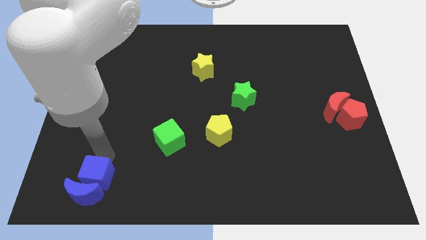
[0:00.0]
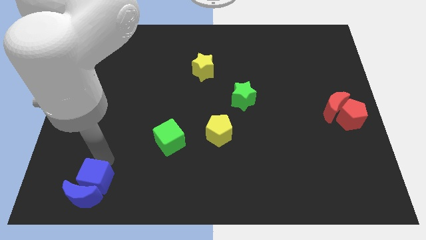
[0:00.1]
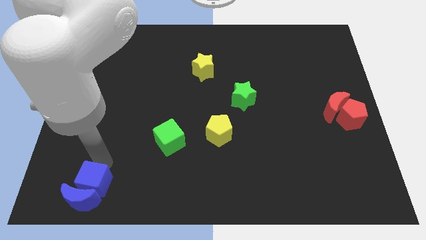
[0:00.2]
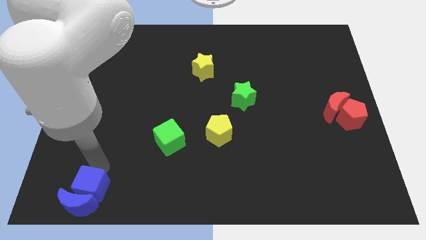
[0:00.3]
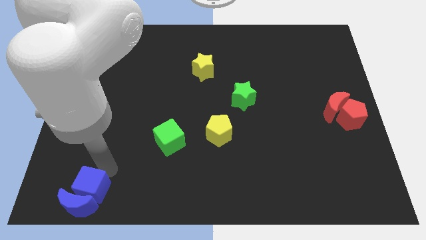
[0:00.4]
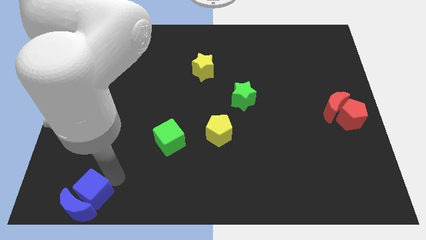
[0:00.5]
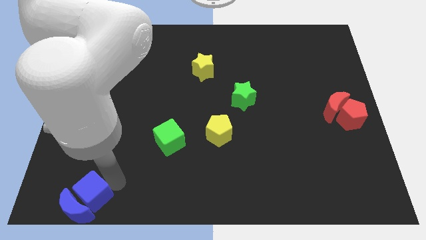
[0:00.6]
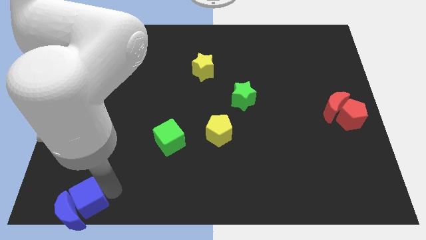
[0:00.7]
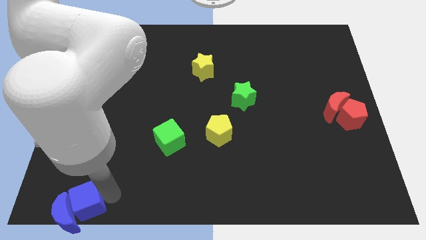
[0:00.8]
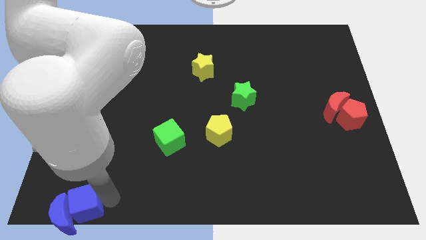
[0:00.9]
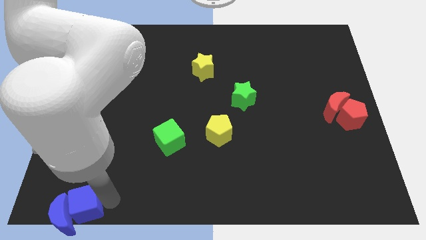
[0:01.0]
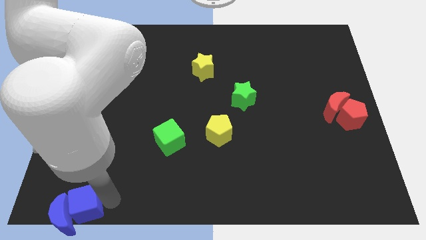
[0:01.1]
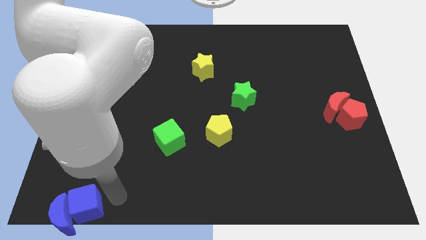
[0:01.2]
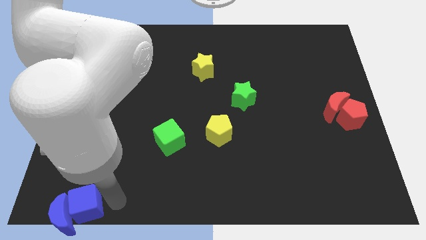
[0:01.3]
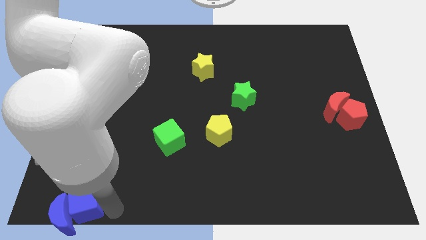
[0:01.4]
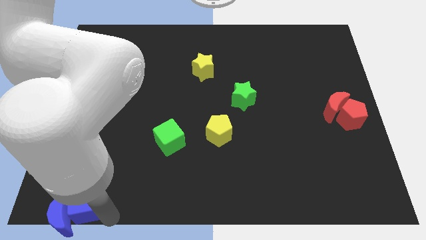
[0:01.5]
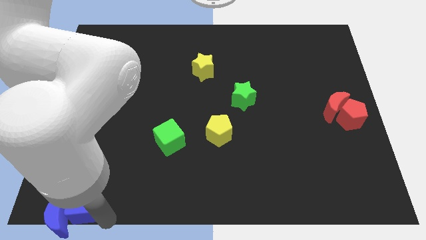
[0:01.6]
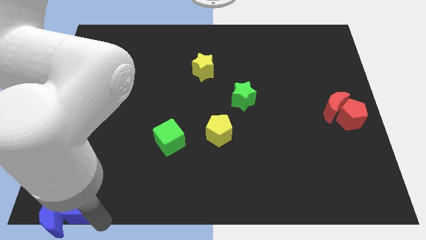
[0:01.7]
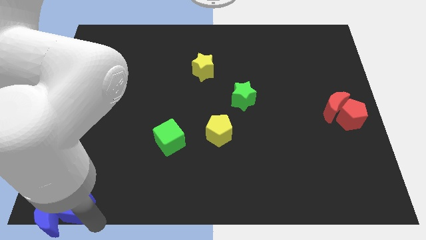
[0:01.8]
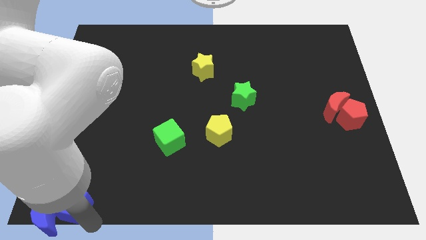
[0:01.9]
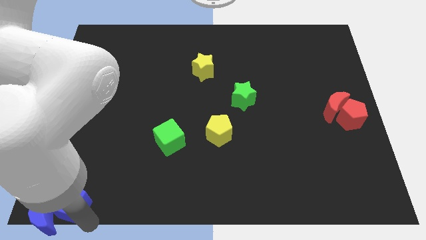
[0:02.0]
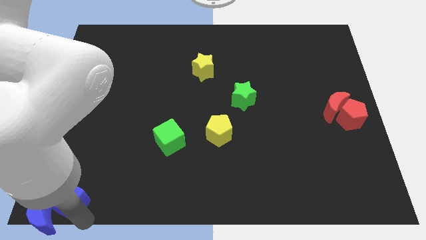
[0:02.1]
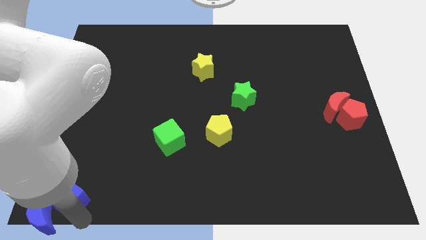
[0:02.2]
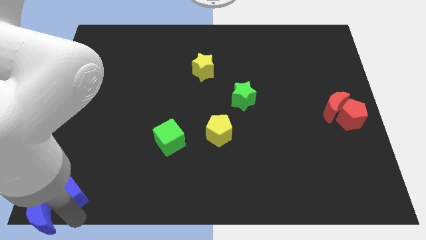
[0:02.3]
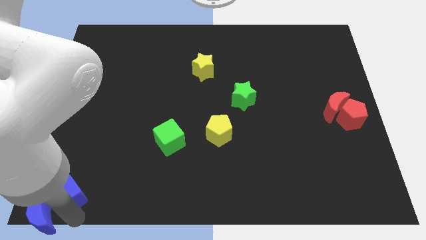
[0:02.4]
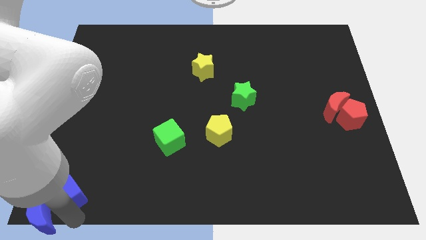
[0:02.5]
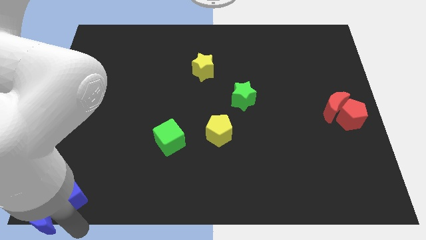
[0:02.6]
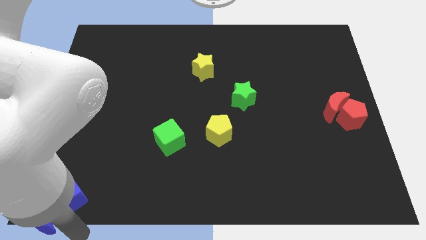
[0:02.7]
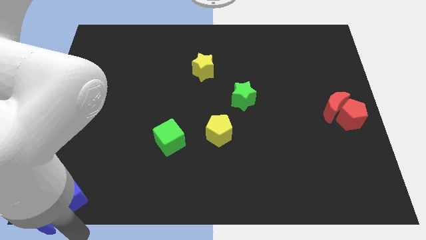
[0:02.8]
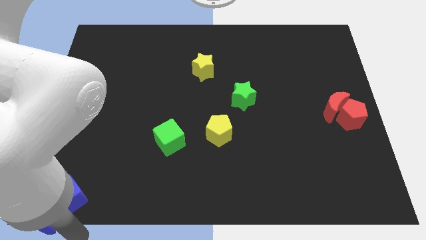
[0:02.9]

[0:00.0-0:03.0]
push the blue blocks to the bottom left corner of the board

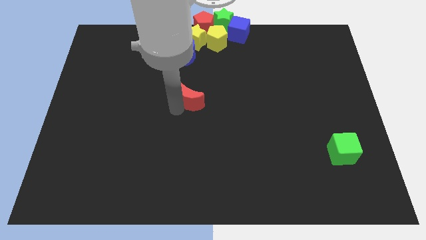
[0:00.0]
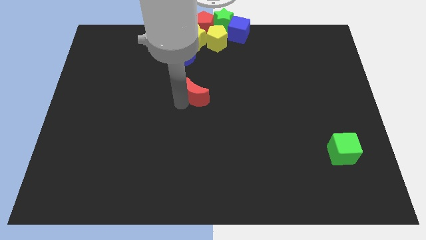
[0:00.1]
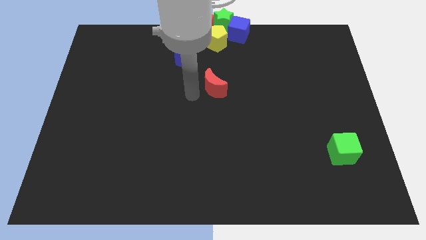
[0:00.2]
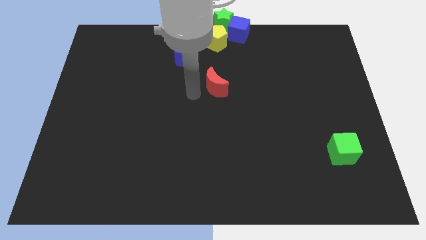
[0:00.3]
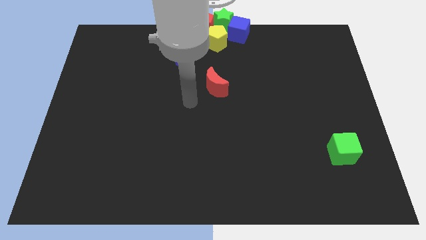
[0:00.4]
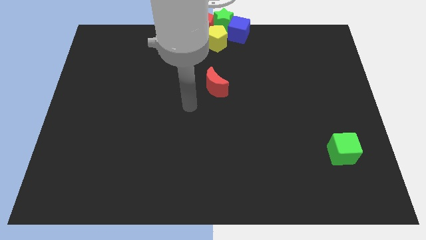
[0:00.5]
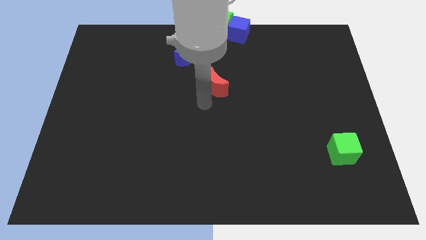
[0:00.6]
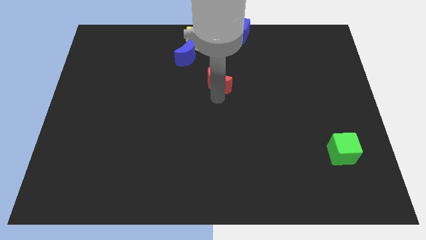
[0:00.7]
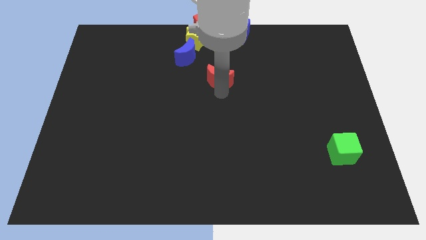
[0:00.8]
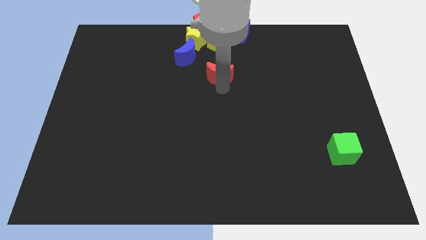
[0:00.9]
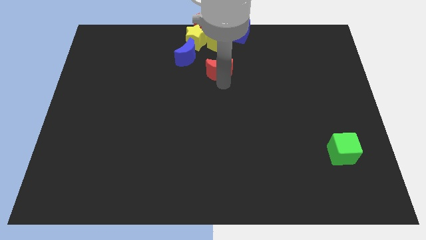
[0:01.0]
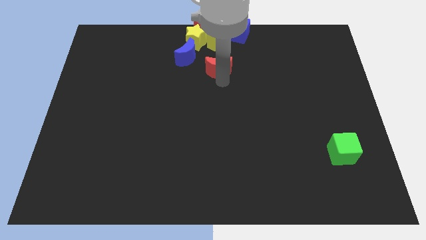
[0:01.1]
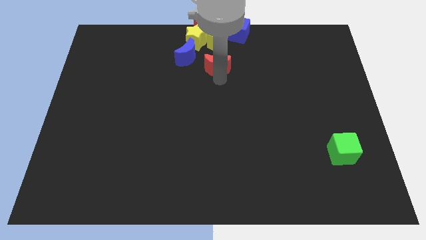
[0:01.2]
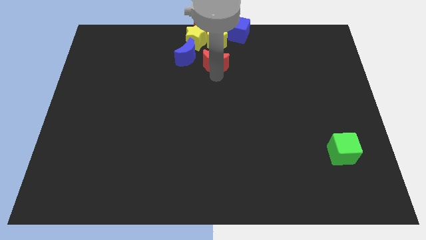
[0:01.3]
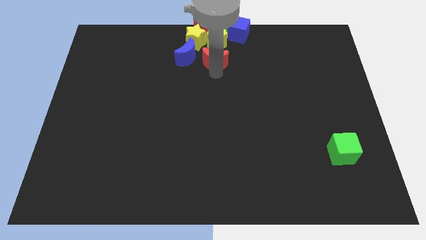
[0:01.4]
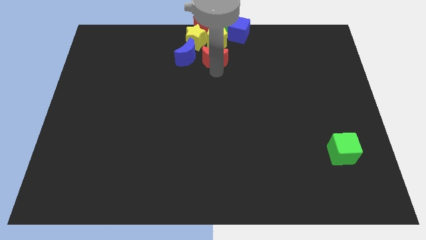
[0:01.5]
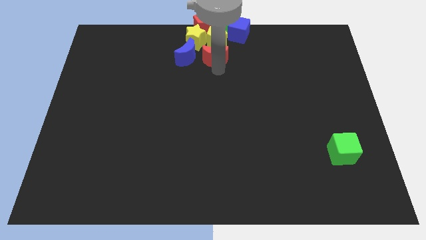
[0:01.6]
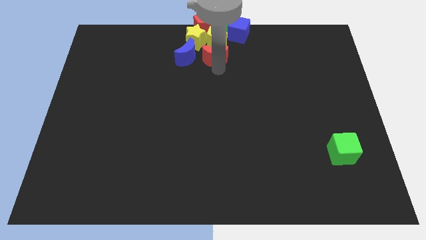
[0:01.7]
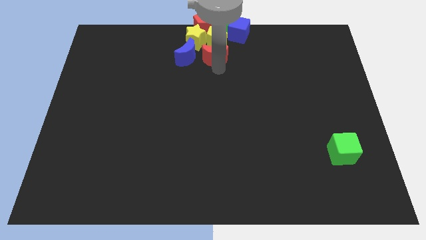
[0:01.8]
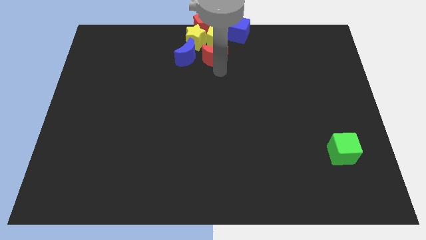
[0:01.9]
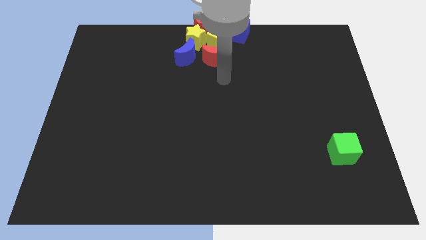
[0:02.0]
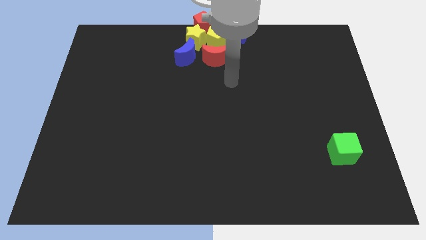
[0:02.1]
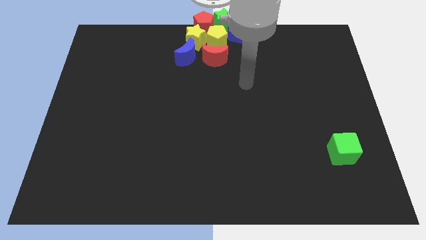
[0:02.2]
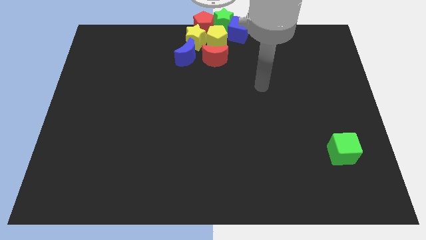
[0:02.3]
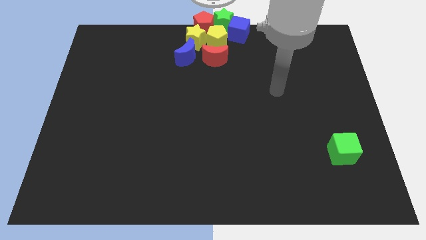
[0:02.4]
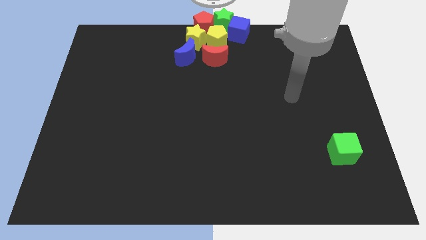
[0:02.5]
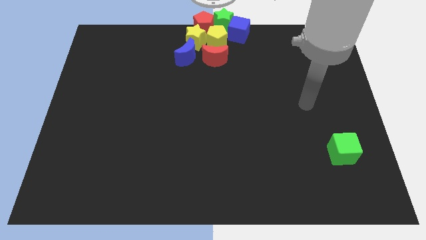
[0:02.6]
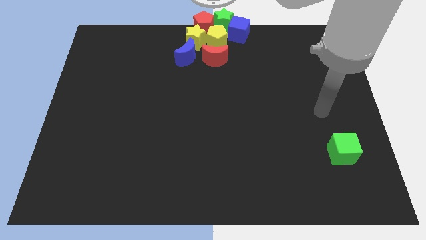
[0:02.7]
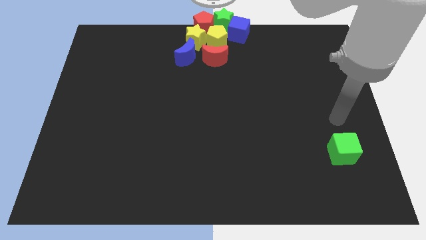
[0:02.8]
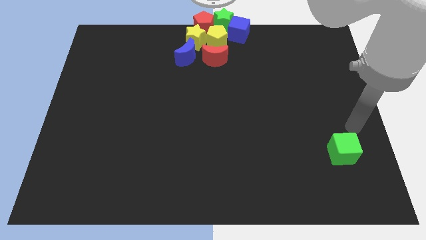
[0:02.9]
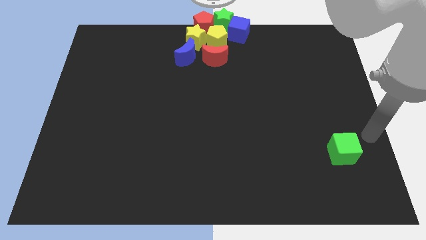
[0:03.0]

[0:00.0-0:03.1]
place the red crescent to the right side of the blue crescent

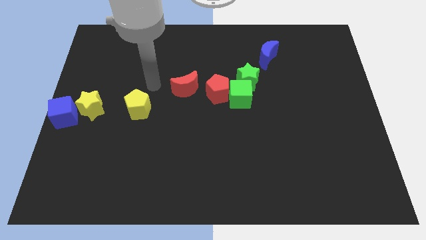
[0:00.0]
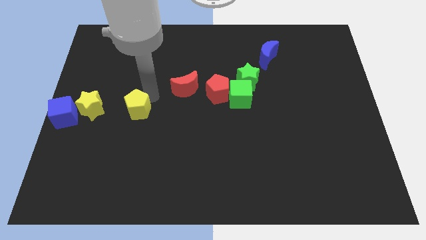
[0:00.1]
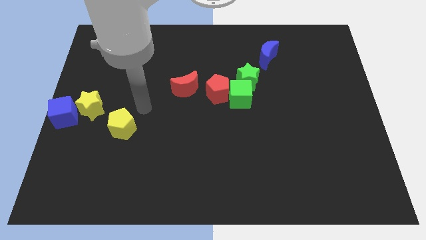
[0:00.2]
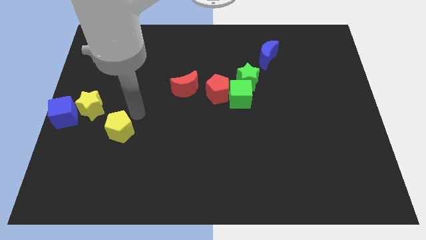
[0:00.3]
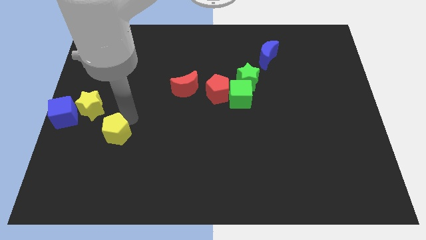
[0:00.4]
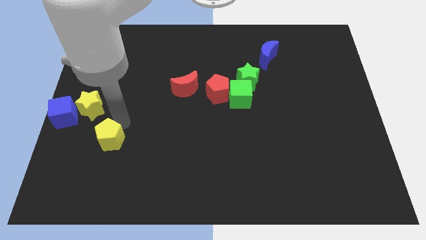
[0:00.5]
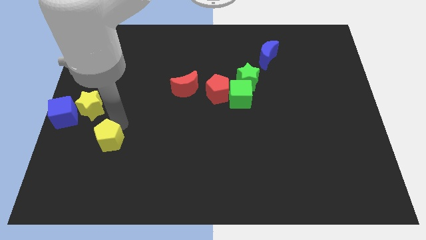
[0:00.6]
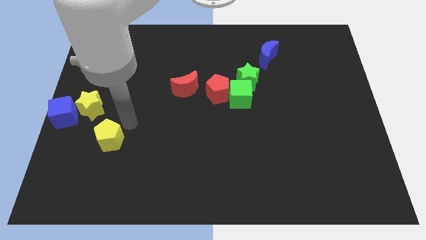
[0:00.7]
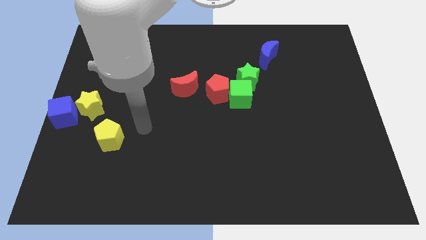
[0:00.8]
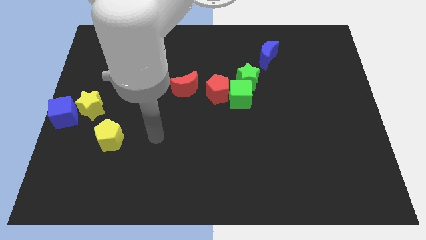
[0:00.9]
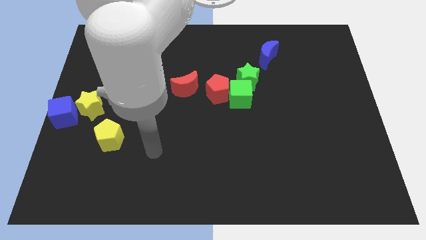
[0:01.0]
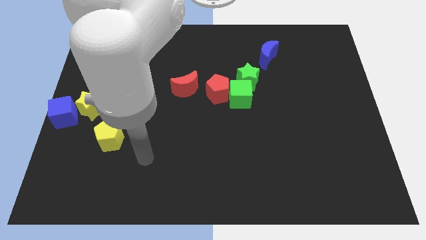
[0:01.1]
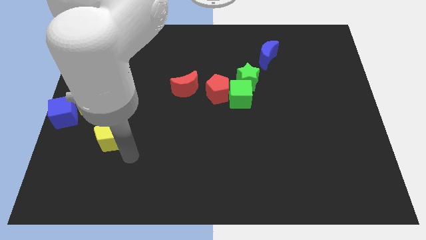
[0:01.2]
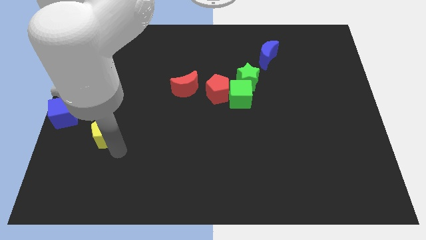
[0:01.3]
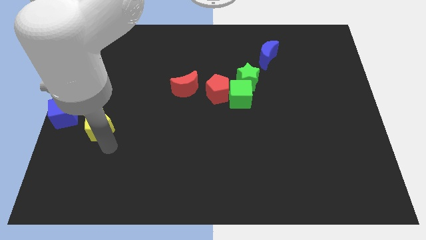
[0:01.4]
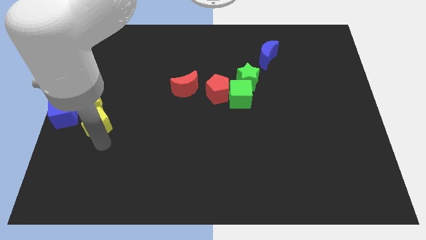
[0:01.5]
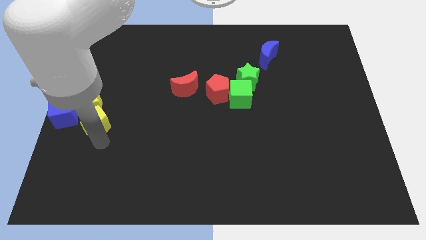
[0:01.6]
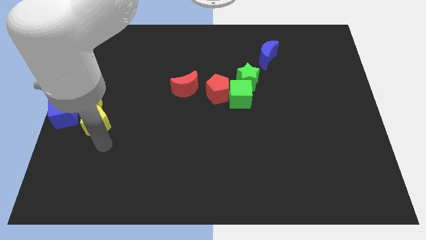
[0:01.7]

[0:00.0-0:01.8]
push the yellow pentagon to the bottom of the yellow star

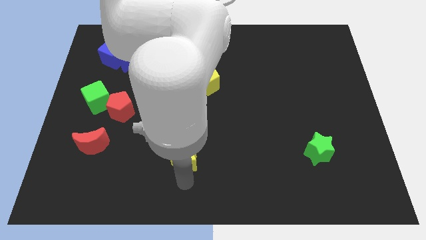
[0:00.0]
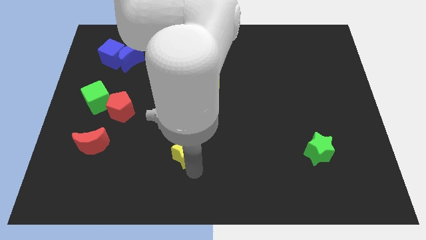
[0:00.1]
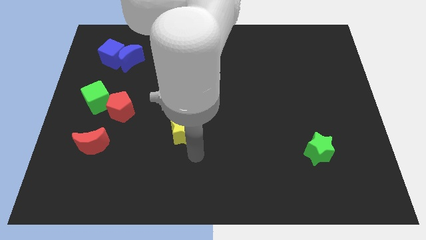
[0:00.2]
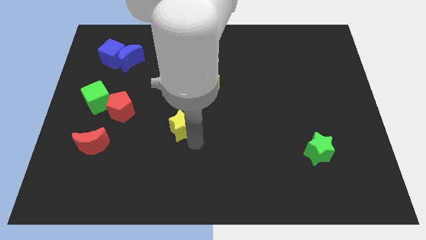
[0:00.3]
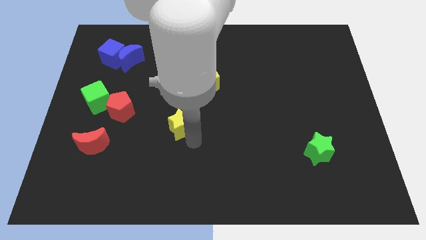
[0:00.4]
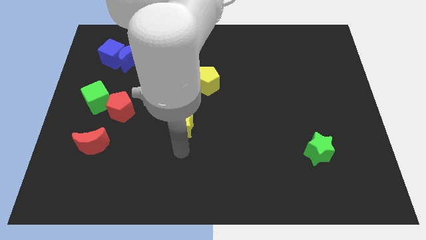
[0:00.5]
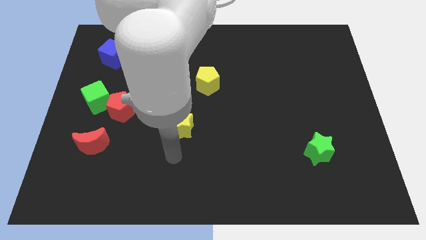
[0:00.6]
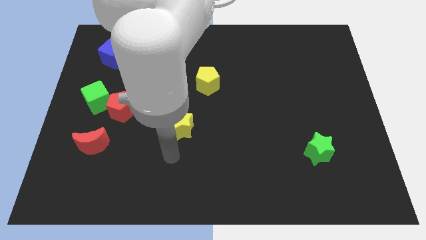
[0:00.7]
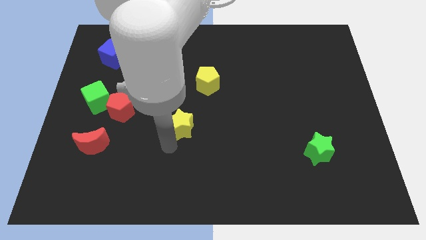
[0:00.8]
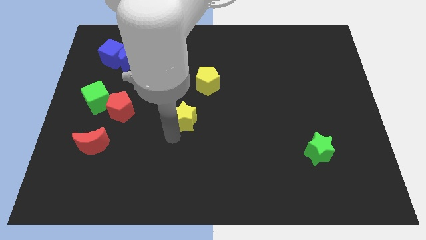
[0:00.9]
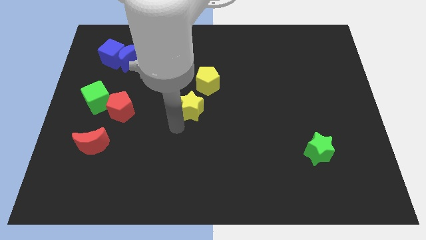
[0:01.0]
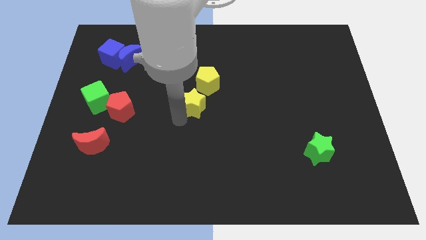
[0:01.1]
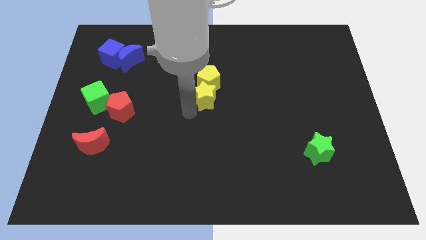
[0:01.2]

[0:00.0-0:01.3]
move the yellow star to the center of the board
